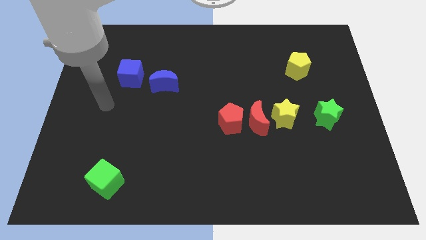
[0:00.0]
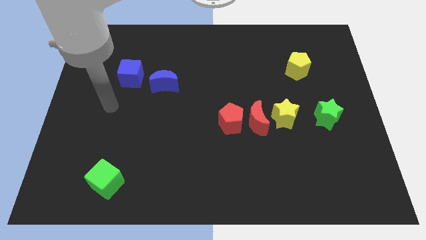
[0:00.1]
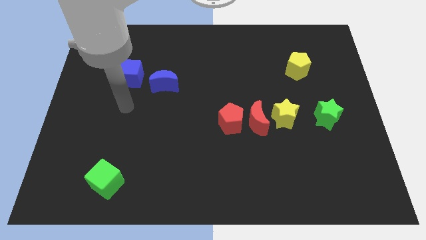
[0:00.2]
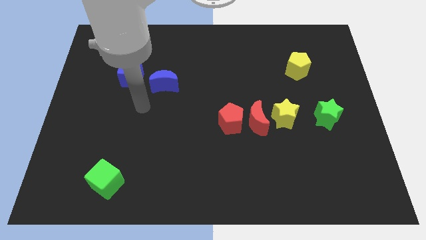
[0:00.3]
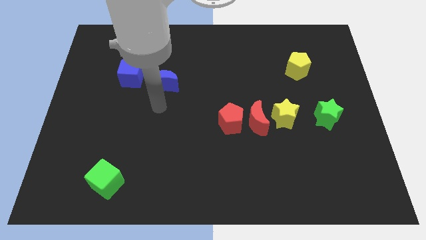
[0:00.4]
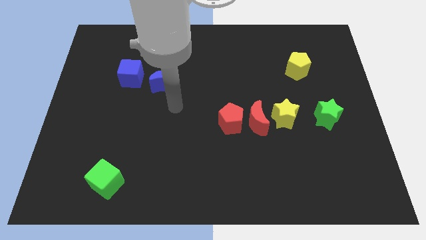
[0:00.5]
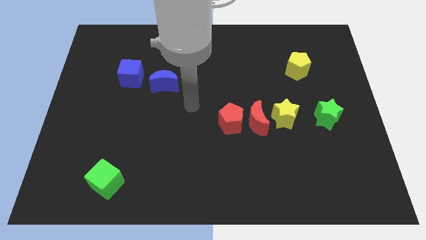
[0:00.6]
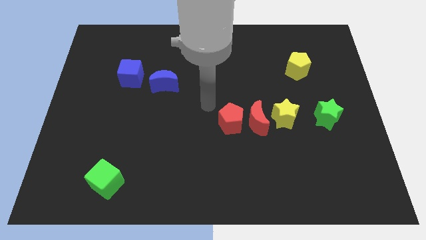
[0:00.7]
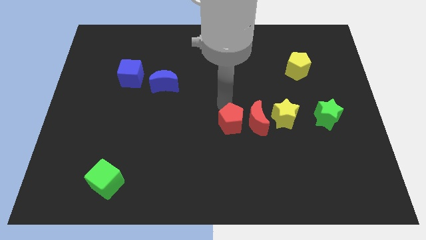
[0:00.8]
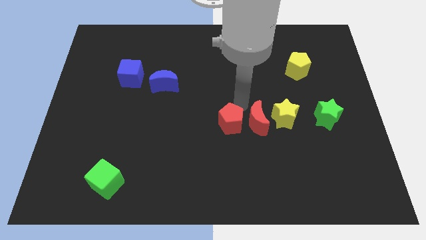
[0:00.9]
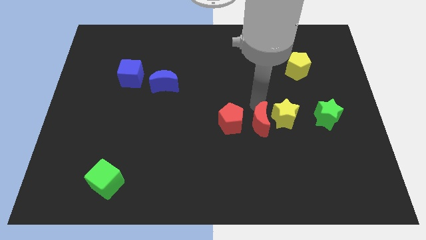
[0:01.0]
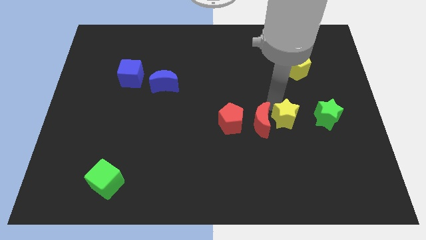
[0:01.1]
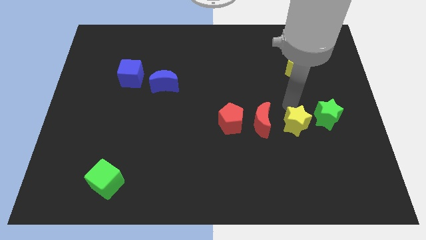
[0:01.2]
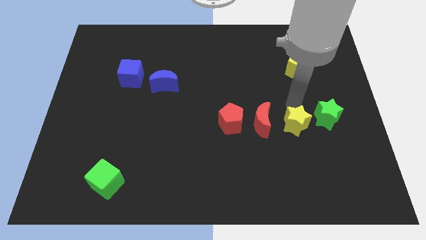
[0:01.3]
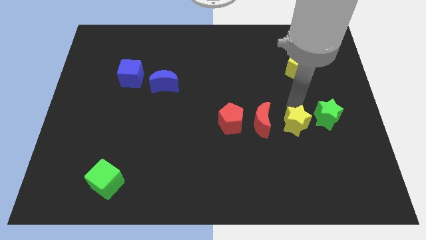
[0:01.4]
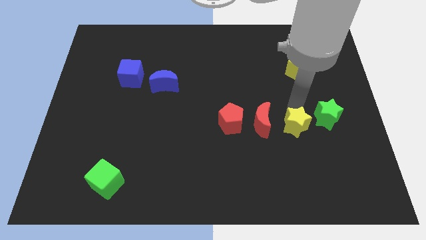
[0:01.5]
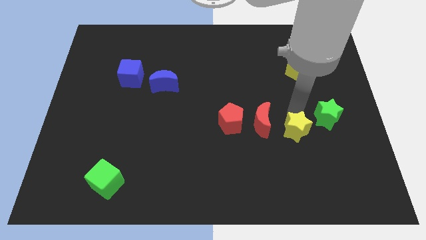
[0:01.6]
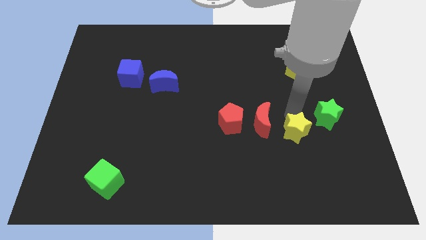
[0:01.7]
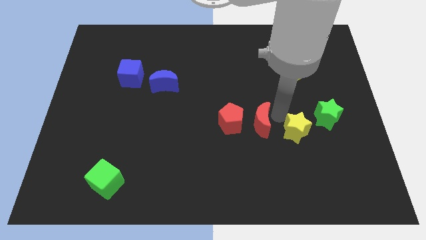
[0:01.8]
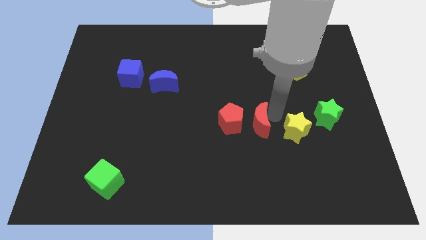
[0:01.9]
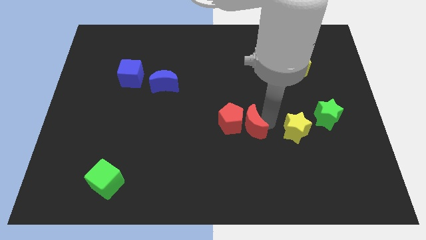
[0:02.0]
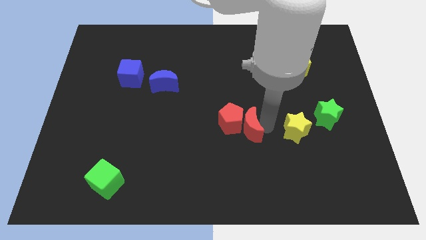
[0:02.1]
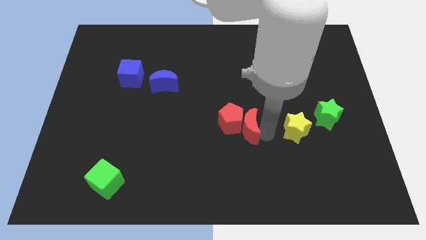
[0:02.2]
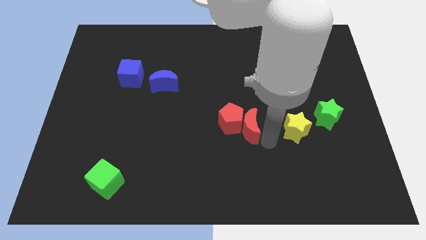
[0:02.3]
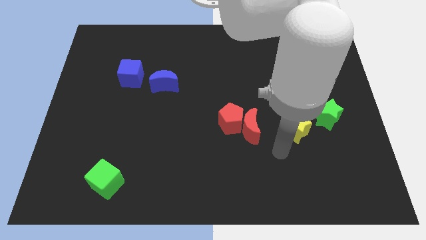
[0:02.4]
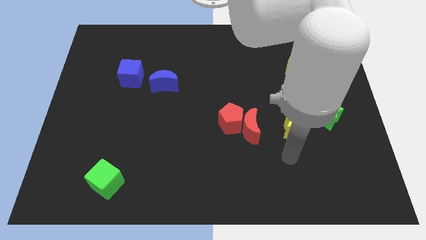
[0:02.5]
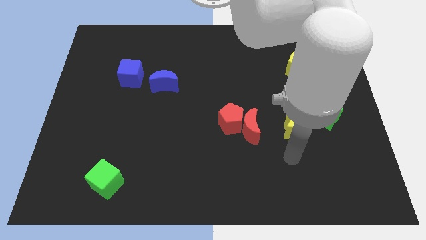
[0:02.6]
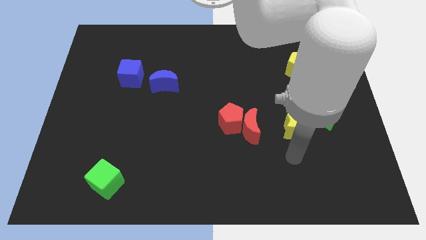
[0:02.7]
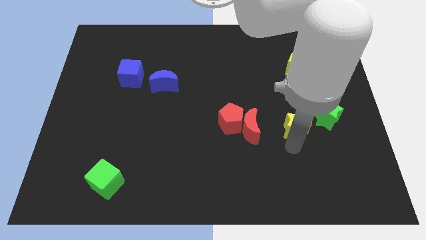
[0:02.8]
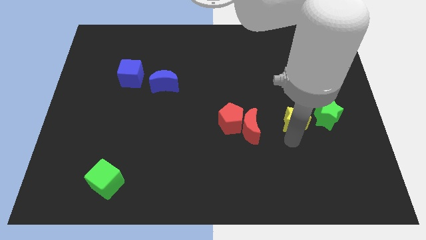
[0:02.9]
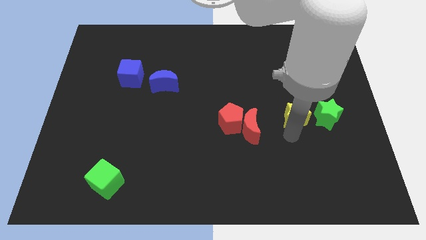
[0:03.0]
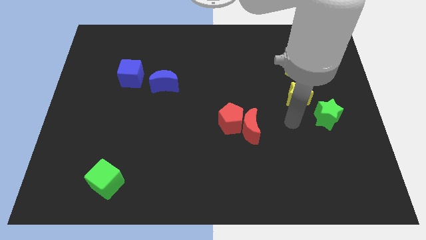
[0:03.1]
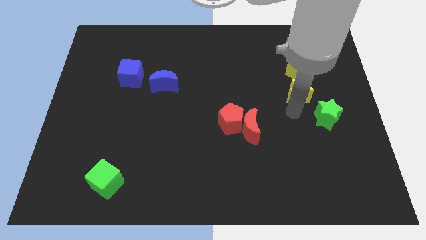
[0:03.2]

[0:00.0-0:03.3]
place the yellow star at the top left side of the green star

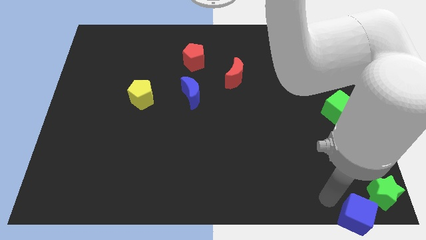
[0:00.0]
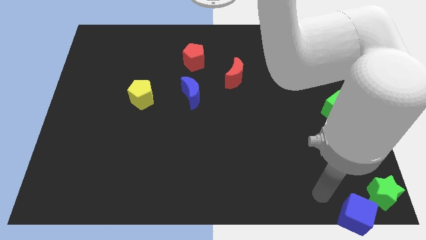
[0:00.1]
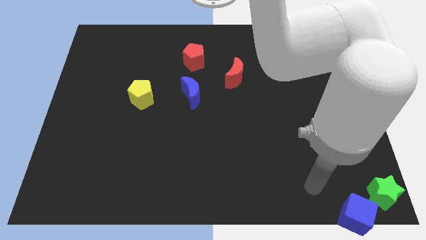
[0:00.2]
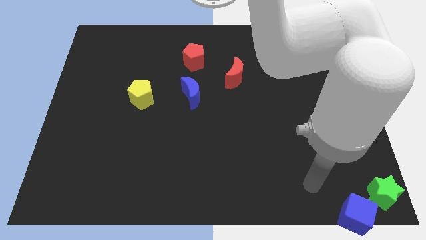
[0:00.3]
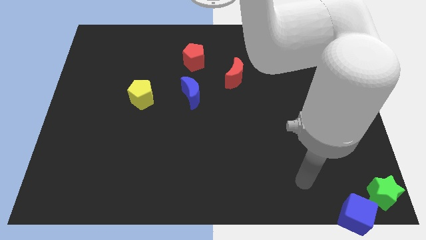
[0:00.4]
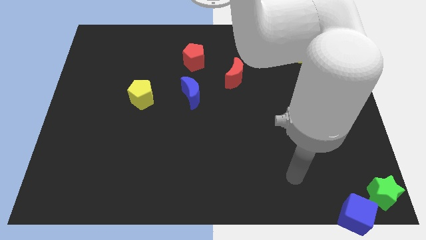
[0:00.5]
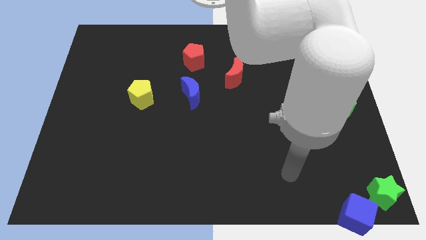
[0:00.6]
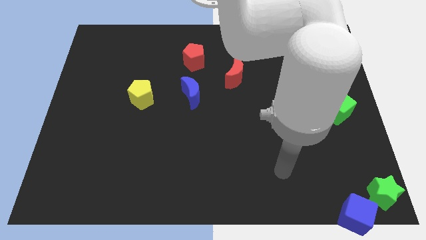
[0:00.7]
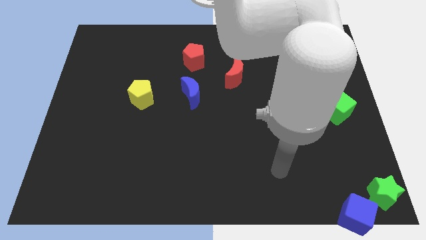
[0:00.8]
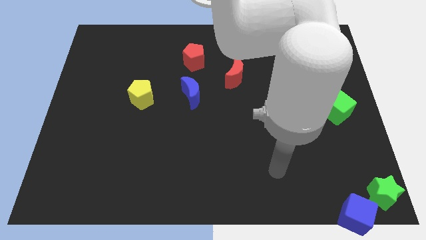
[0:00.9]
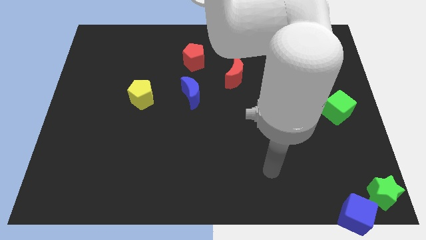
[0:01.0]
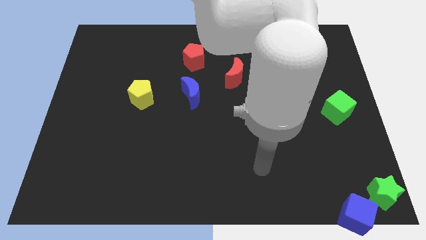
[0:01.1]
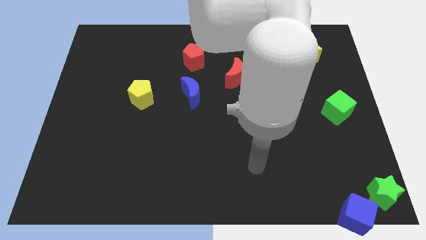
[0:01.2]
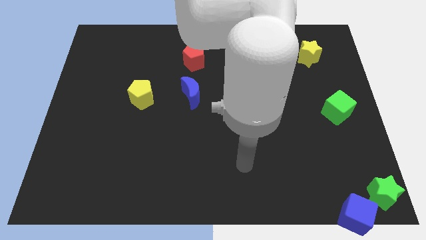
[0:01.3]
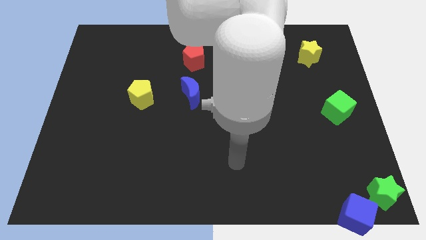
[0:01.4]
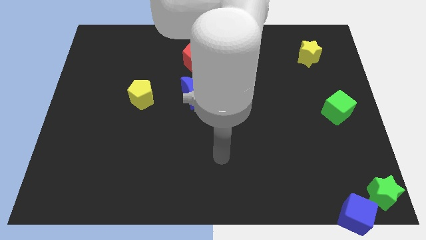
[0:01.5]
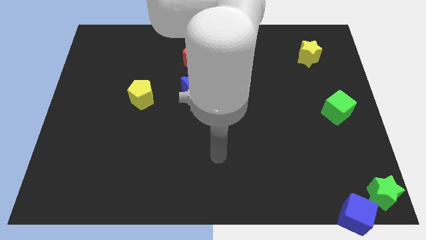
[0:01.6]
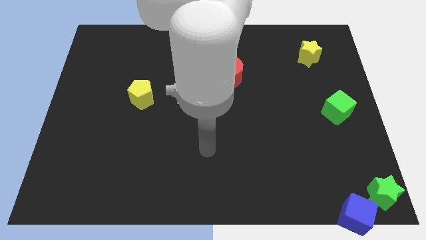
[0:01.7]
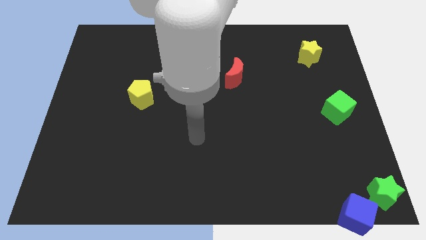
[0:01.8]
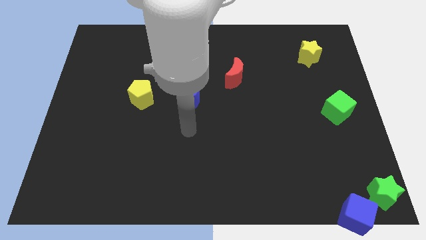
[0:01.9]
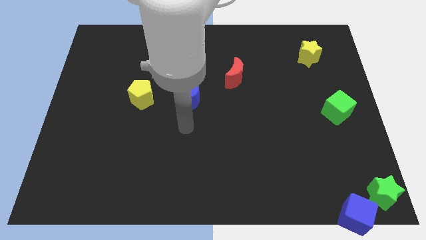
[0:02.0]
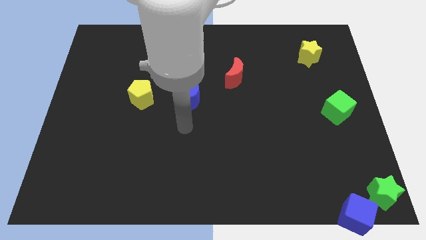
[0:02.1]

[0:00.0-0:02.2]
place your hand under the blue crescent

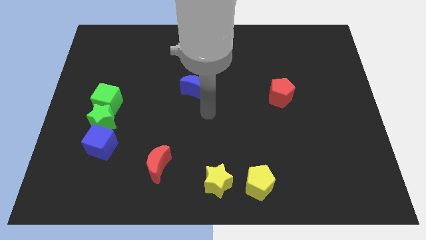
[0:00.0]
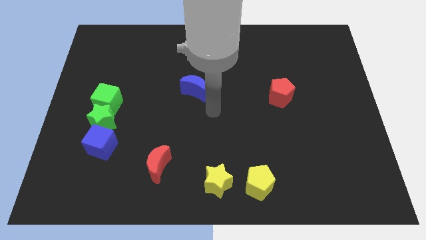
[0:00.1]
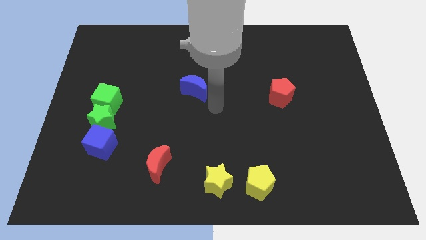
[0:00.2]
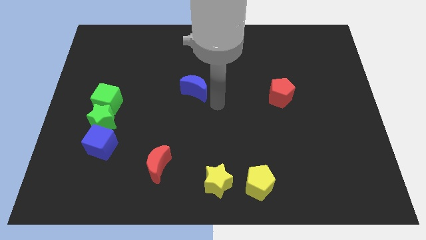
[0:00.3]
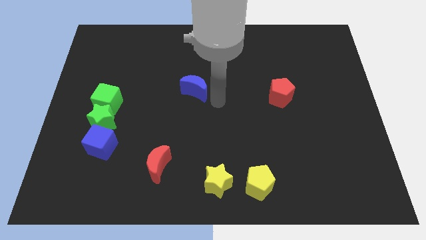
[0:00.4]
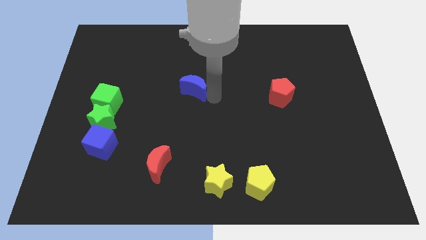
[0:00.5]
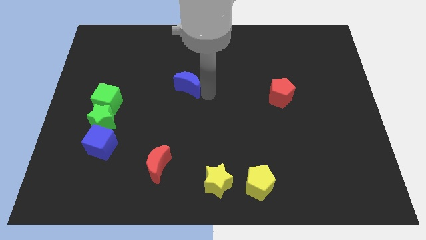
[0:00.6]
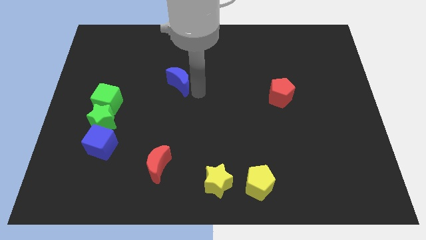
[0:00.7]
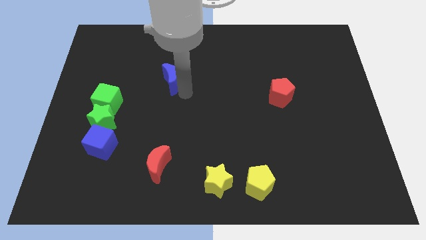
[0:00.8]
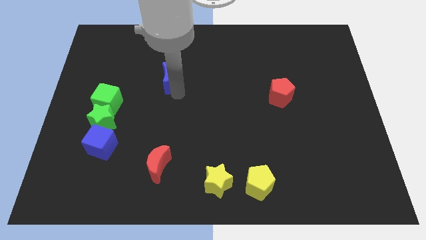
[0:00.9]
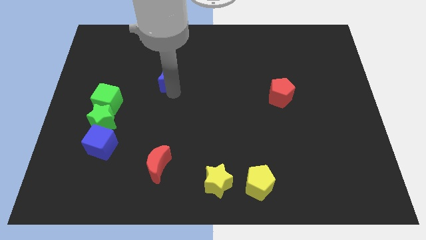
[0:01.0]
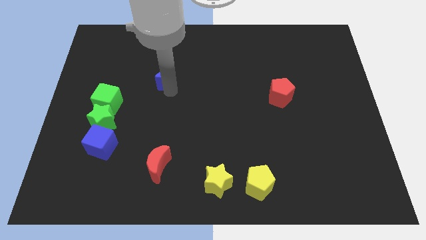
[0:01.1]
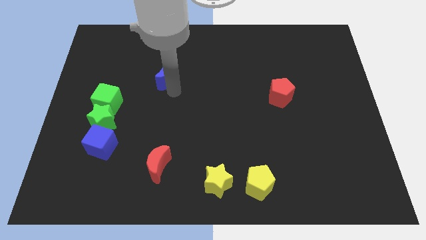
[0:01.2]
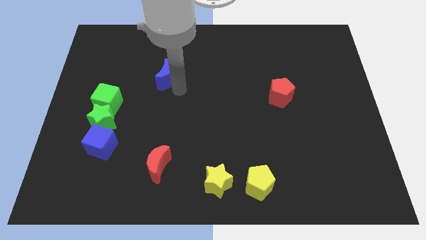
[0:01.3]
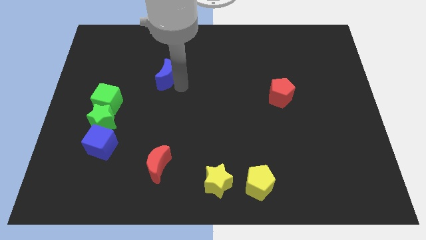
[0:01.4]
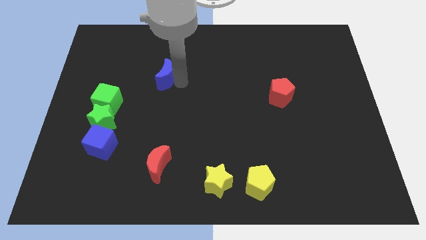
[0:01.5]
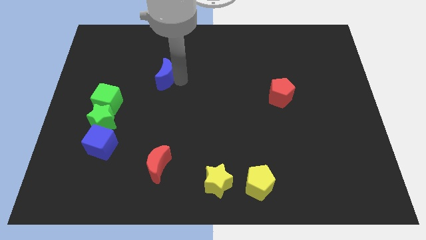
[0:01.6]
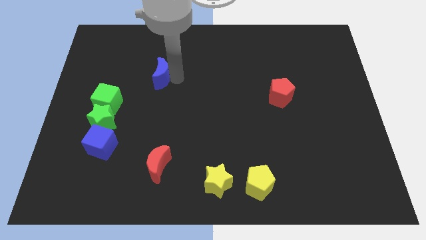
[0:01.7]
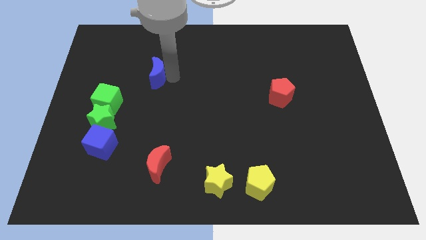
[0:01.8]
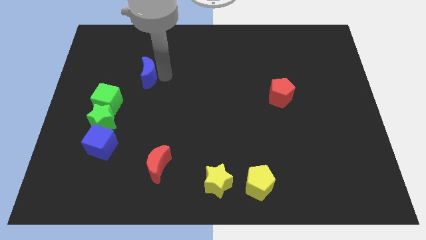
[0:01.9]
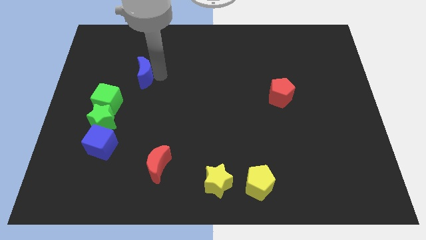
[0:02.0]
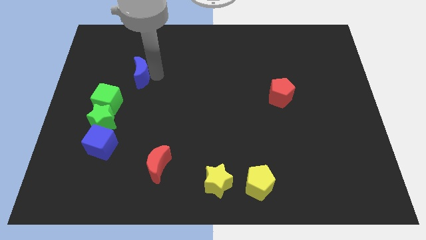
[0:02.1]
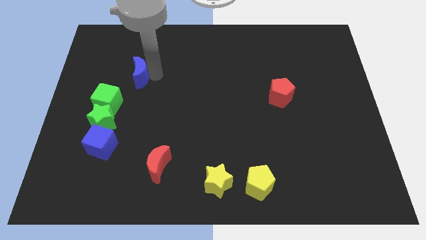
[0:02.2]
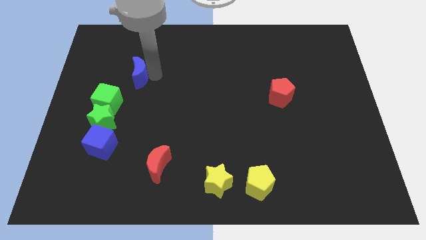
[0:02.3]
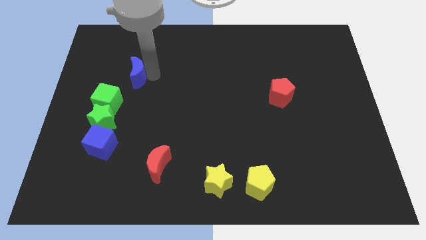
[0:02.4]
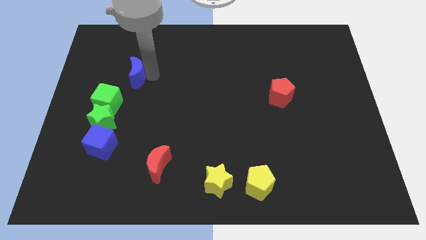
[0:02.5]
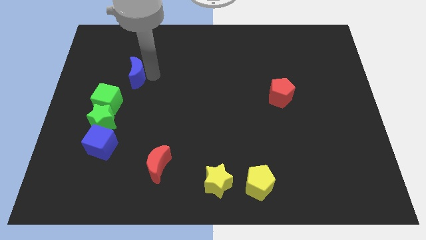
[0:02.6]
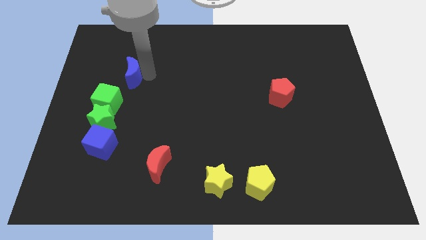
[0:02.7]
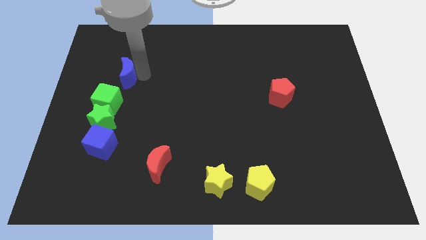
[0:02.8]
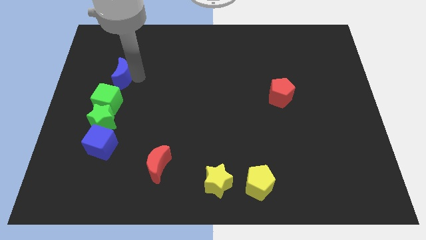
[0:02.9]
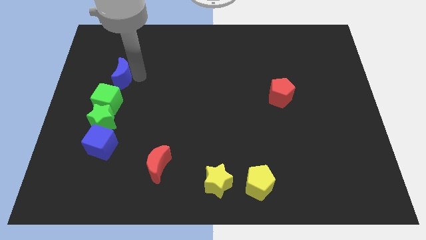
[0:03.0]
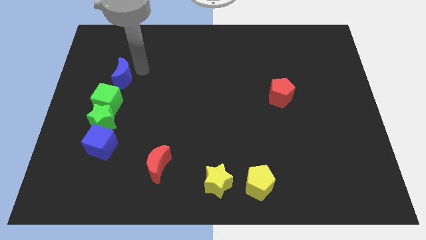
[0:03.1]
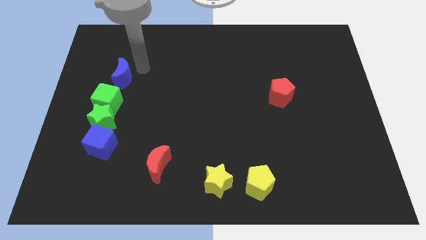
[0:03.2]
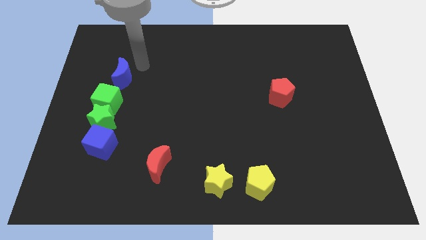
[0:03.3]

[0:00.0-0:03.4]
move the blue moon vertically above the green cube

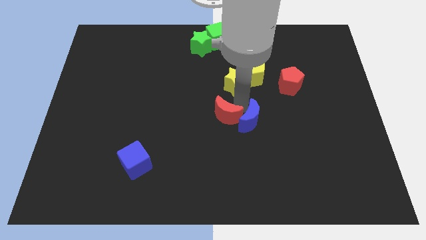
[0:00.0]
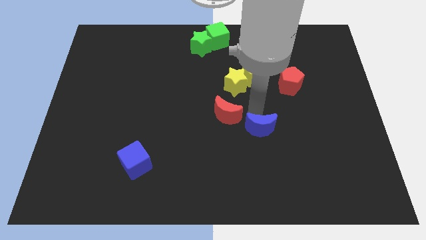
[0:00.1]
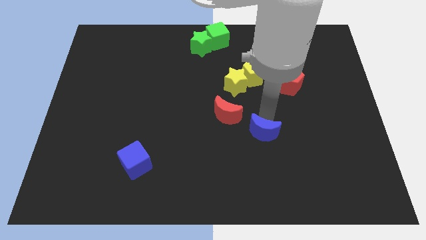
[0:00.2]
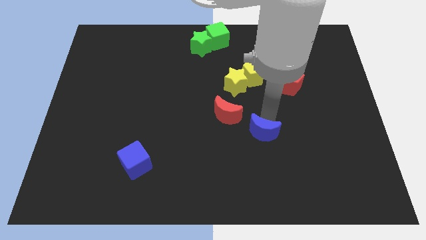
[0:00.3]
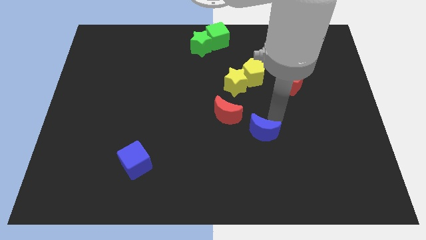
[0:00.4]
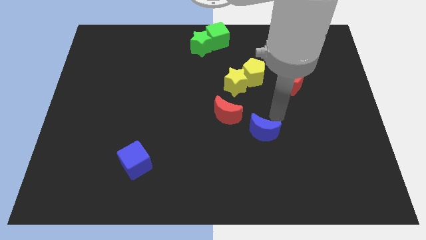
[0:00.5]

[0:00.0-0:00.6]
push the blue crescent slightly to the left
